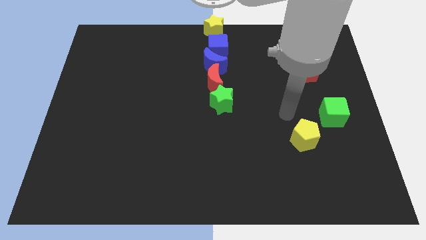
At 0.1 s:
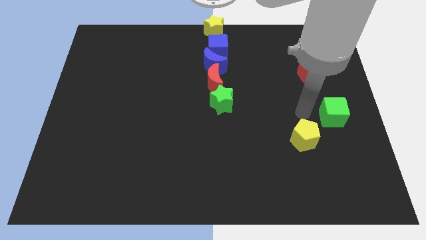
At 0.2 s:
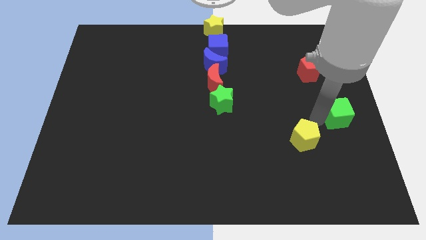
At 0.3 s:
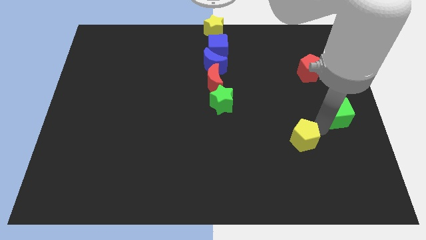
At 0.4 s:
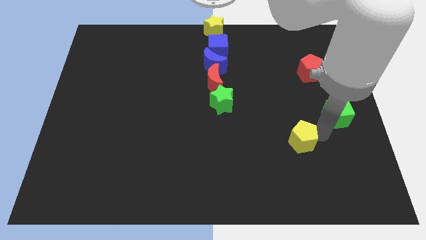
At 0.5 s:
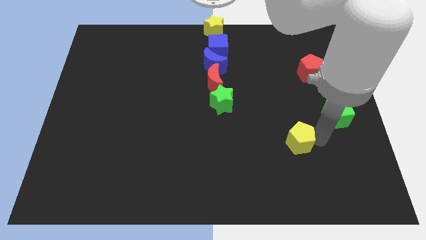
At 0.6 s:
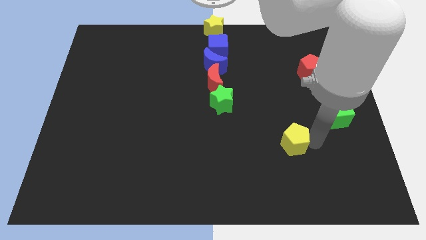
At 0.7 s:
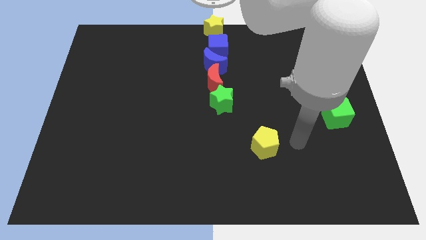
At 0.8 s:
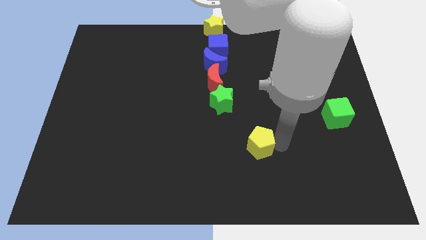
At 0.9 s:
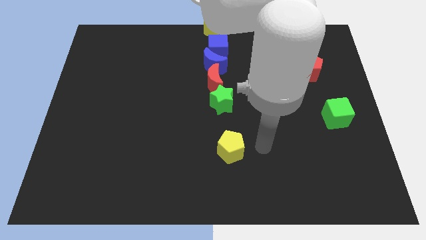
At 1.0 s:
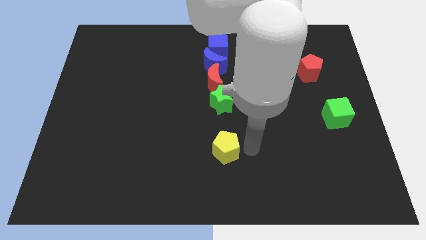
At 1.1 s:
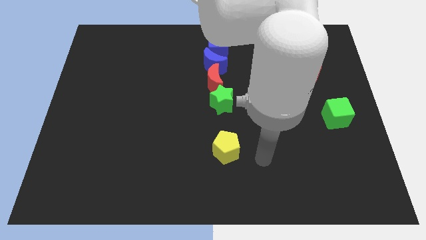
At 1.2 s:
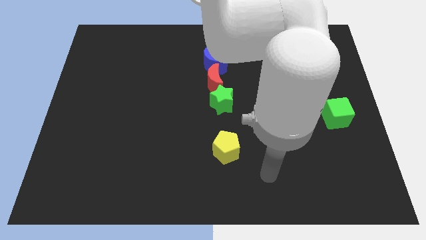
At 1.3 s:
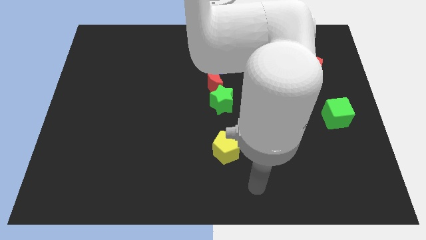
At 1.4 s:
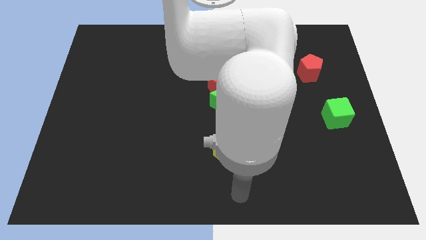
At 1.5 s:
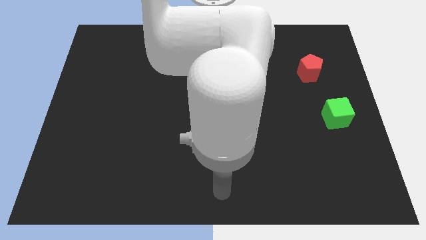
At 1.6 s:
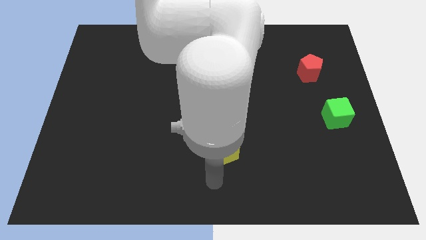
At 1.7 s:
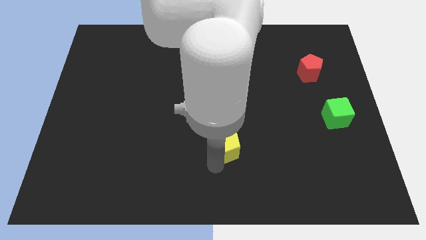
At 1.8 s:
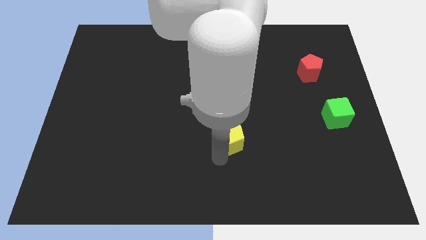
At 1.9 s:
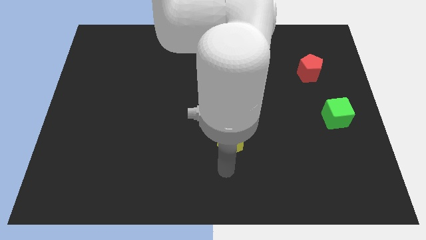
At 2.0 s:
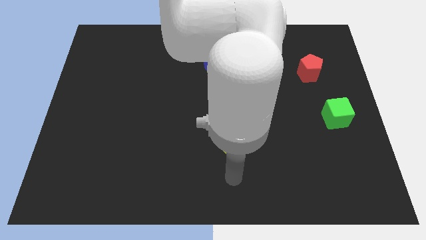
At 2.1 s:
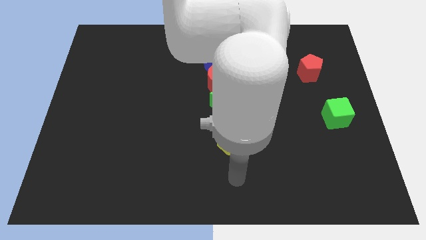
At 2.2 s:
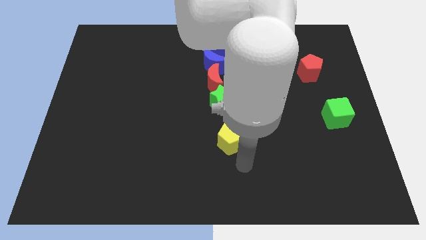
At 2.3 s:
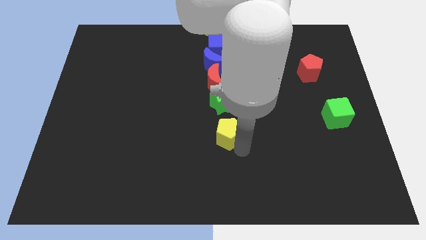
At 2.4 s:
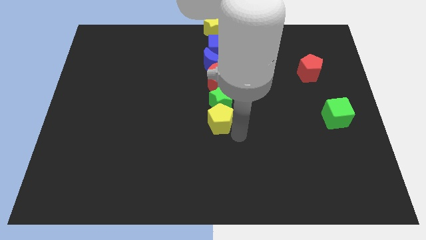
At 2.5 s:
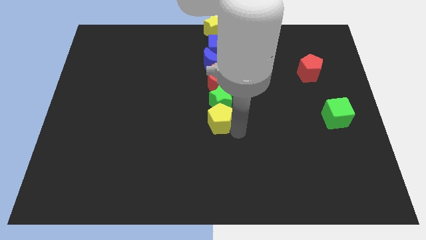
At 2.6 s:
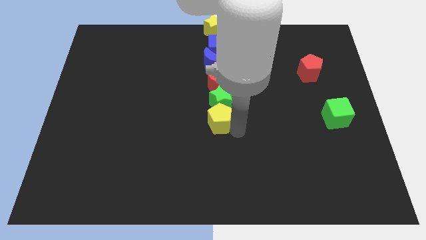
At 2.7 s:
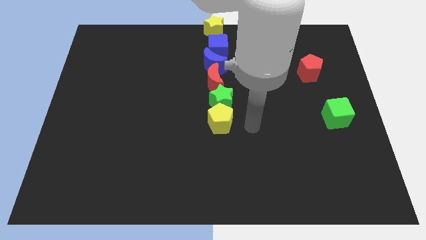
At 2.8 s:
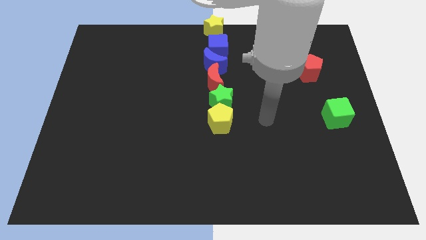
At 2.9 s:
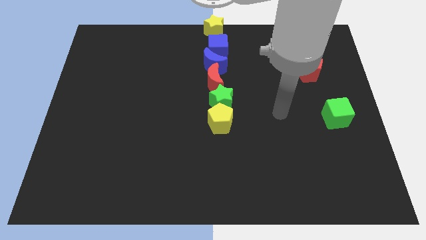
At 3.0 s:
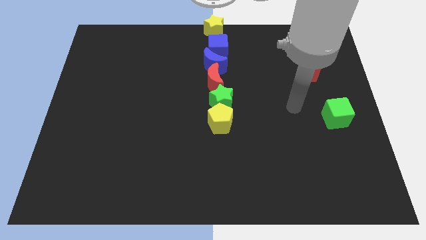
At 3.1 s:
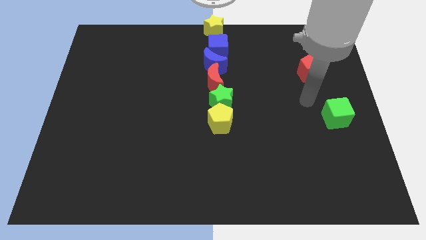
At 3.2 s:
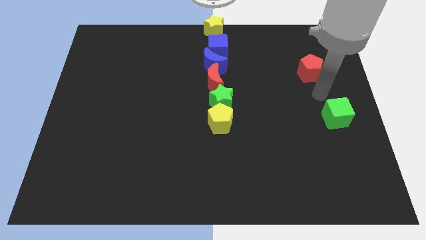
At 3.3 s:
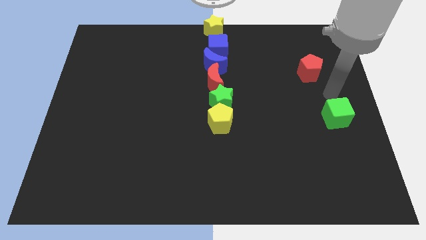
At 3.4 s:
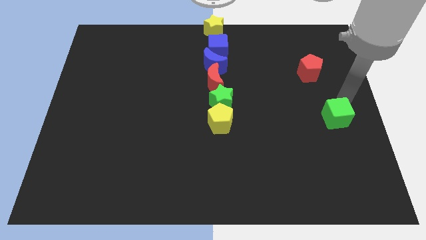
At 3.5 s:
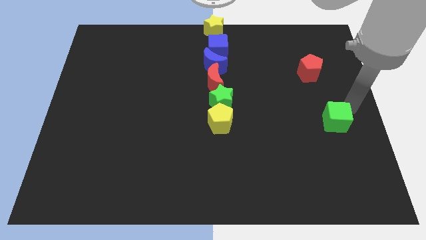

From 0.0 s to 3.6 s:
move the yellow pentagon to the bottom of the green star

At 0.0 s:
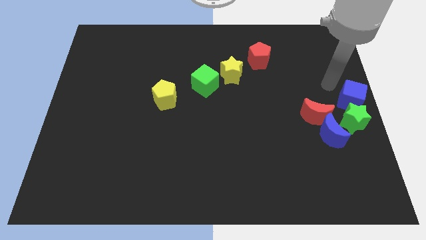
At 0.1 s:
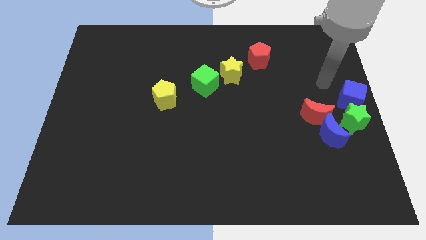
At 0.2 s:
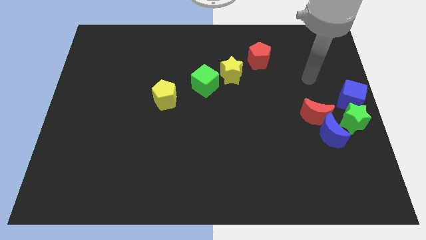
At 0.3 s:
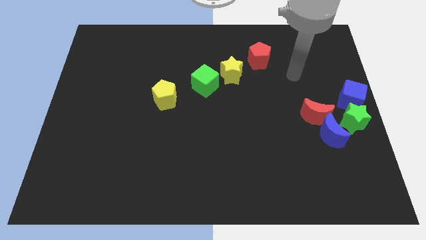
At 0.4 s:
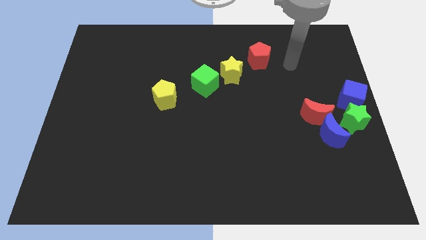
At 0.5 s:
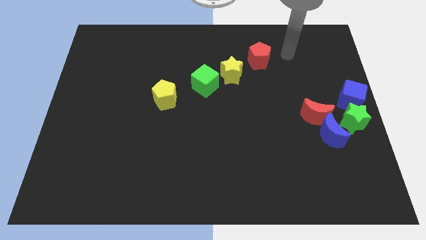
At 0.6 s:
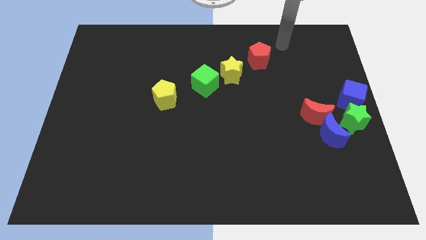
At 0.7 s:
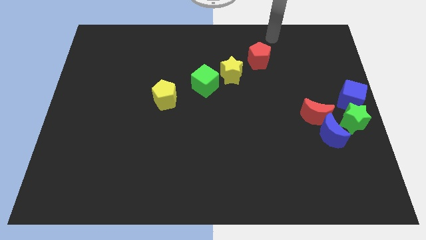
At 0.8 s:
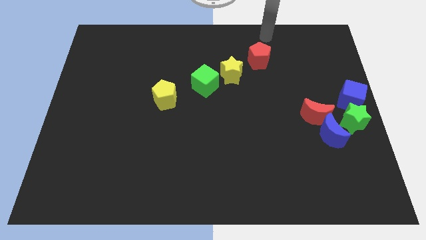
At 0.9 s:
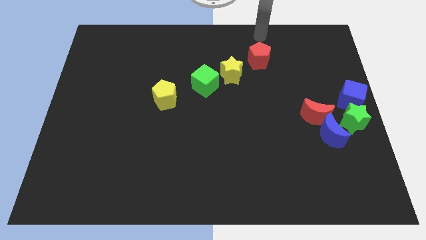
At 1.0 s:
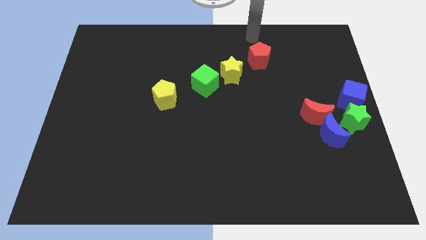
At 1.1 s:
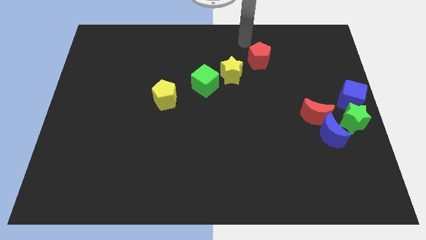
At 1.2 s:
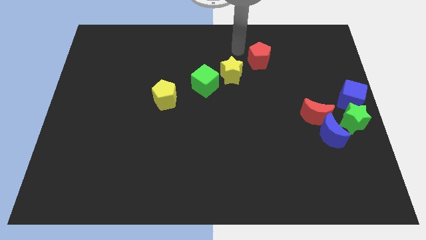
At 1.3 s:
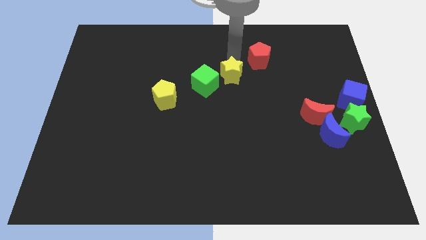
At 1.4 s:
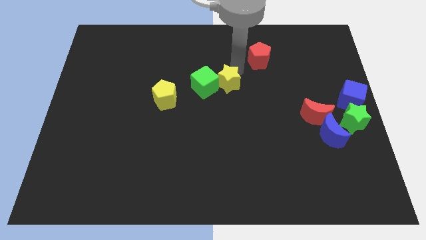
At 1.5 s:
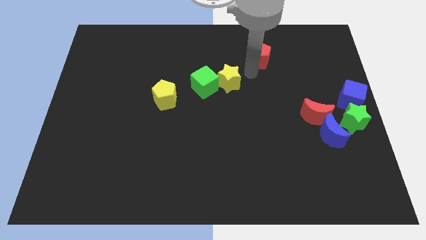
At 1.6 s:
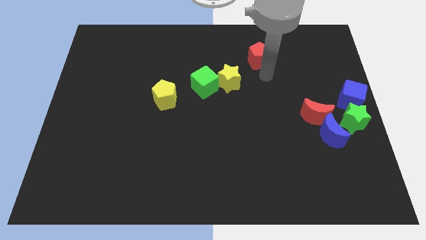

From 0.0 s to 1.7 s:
slide the yellow star into the green cube

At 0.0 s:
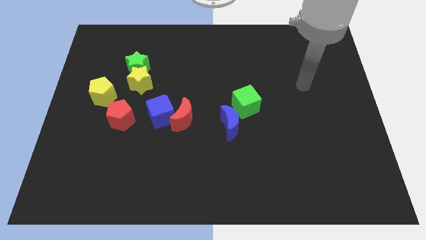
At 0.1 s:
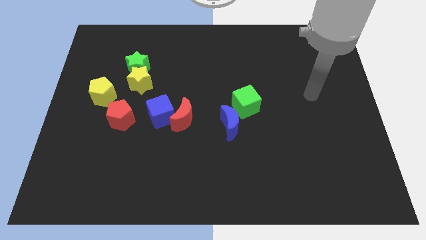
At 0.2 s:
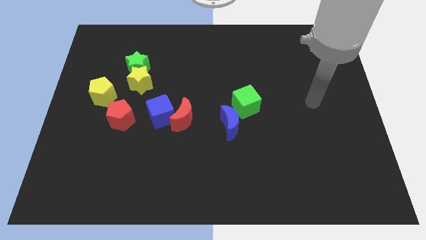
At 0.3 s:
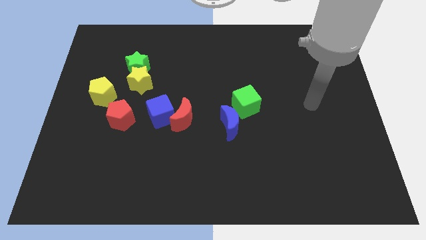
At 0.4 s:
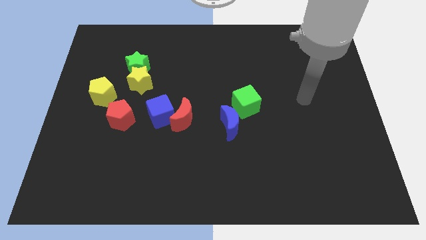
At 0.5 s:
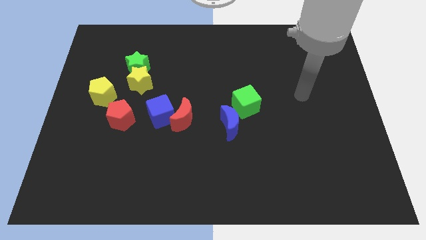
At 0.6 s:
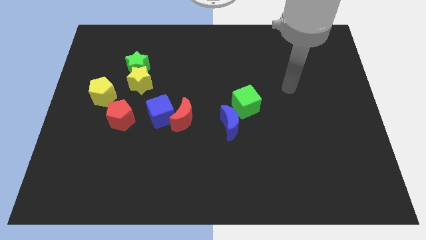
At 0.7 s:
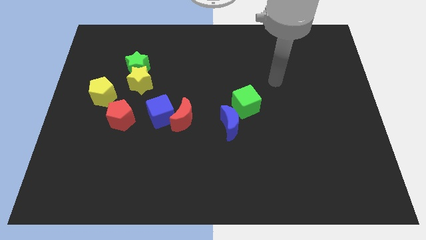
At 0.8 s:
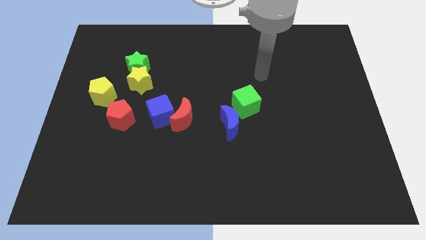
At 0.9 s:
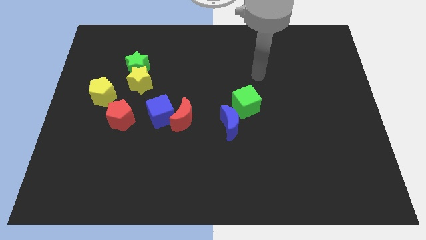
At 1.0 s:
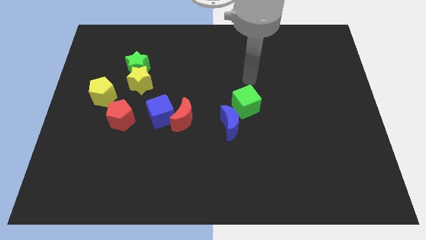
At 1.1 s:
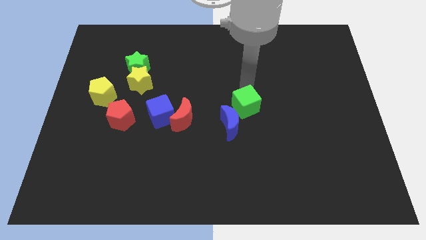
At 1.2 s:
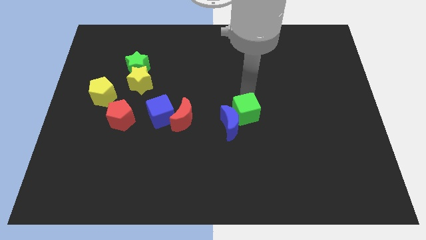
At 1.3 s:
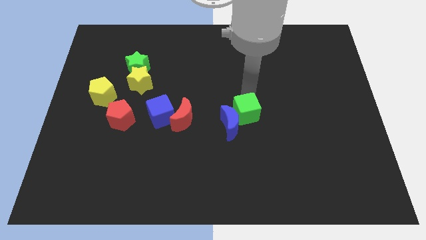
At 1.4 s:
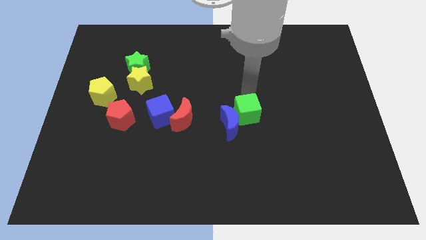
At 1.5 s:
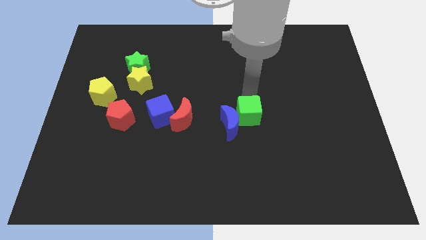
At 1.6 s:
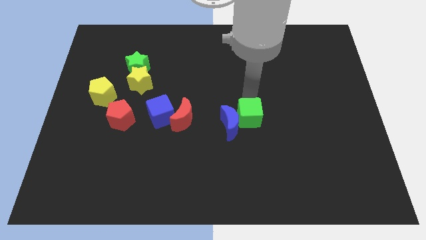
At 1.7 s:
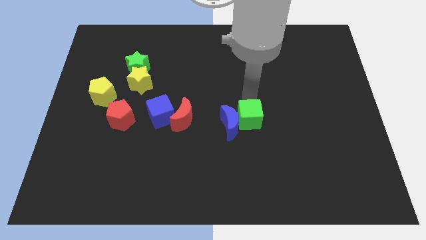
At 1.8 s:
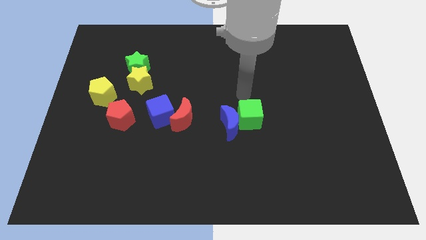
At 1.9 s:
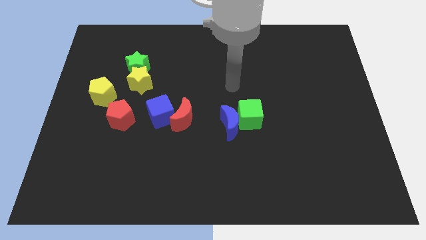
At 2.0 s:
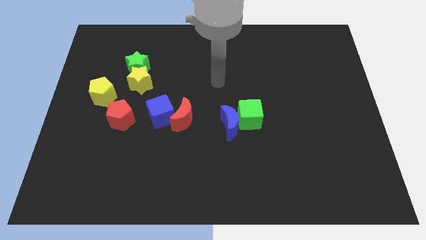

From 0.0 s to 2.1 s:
move the green cube to the right side of the blue crescent

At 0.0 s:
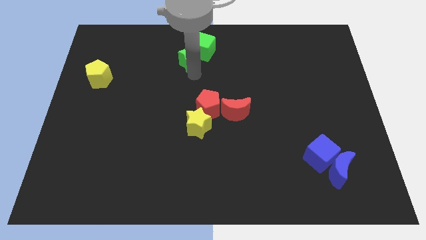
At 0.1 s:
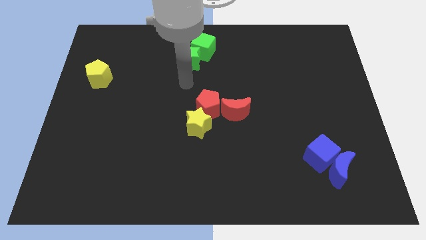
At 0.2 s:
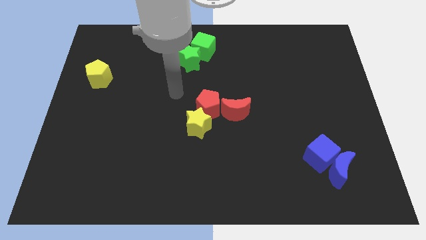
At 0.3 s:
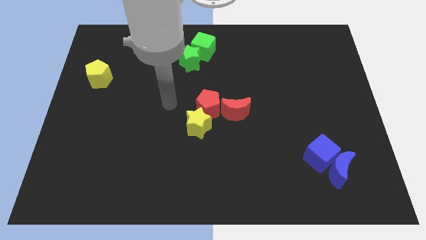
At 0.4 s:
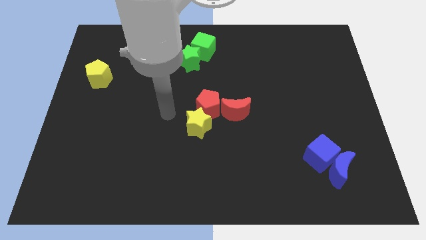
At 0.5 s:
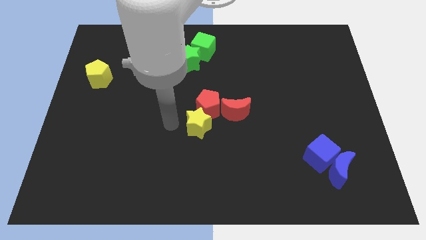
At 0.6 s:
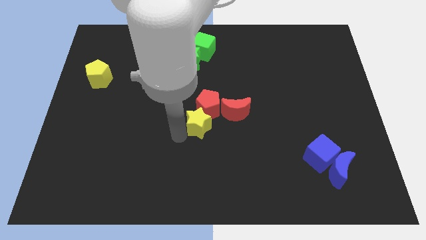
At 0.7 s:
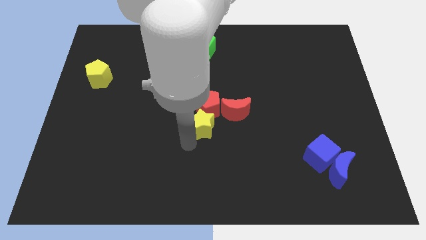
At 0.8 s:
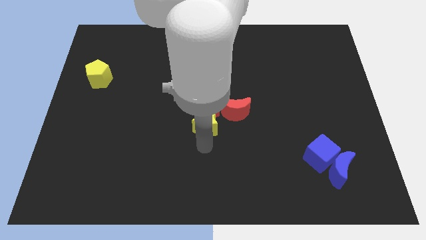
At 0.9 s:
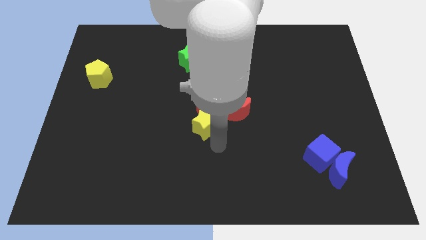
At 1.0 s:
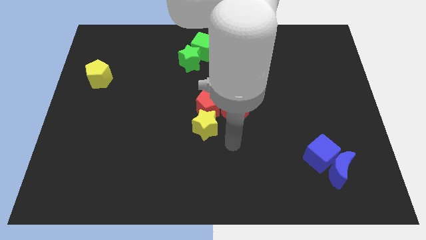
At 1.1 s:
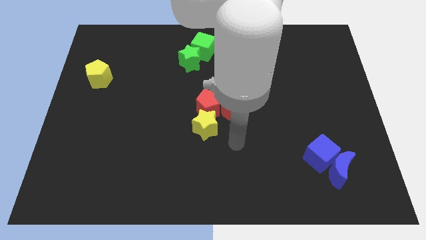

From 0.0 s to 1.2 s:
slightly push the yellow star towards the right side of the board

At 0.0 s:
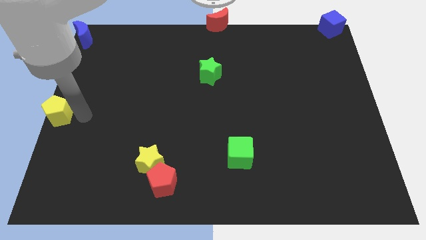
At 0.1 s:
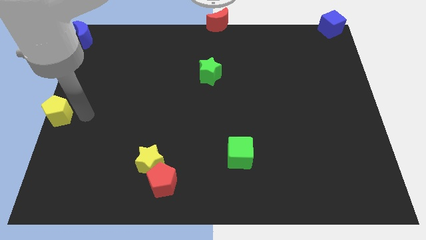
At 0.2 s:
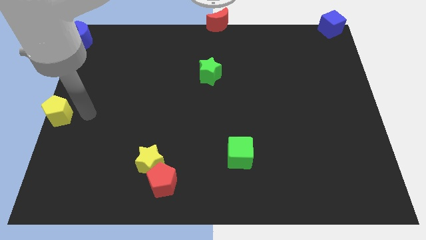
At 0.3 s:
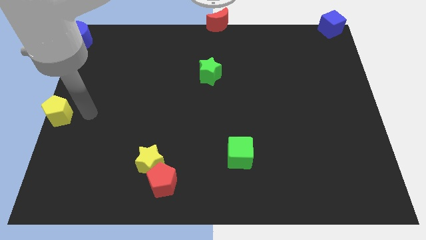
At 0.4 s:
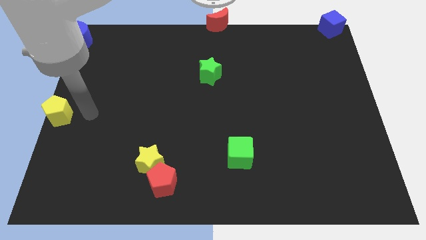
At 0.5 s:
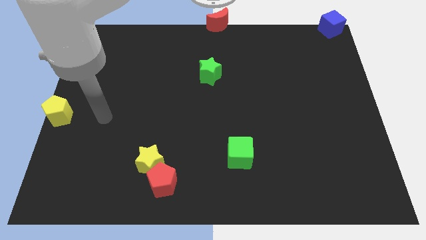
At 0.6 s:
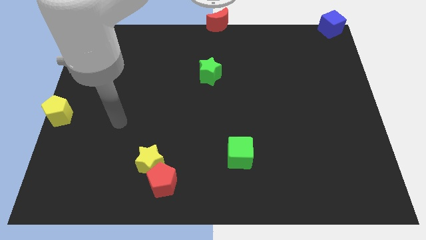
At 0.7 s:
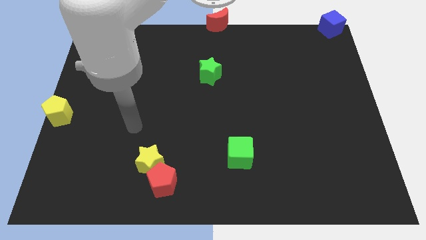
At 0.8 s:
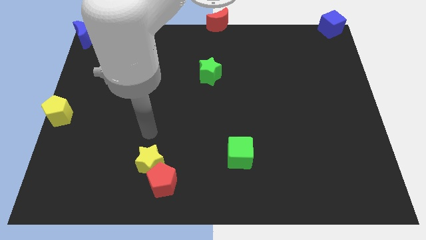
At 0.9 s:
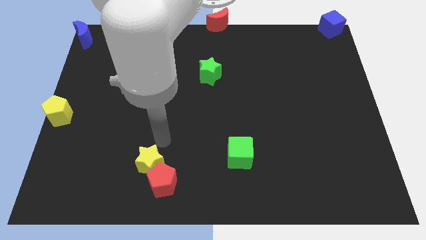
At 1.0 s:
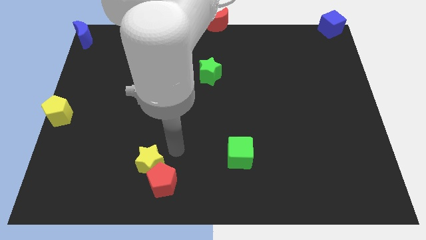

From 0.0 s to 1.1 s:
move your arm away from yellow pentagon
